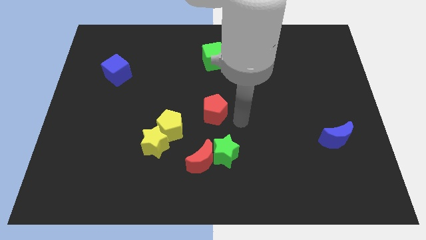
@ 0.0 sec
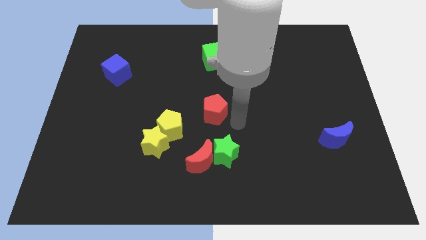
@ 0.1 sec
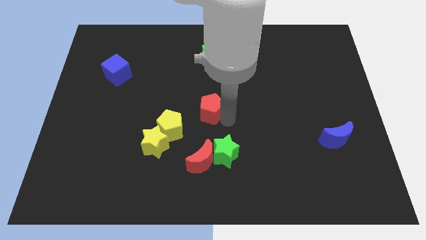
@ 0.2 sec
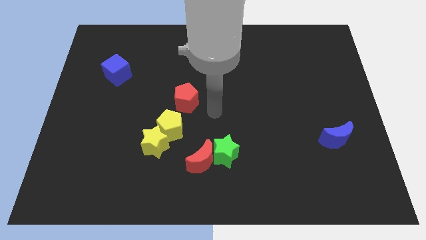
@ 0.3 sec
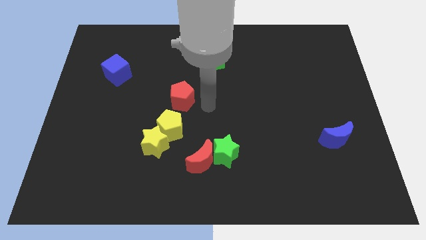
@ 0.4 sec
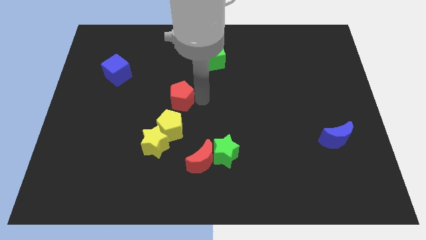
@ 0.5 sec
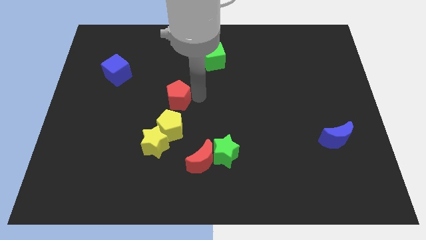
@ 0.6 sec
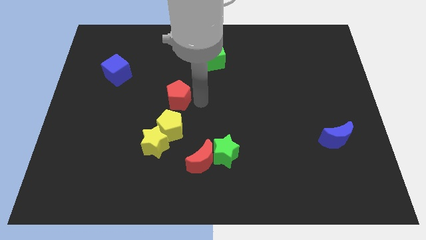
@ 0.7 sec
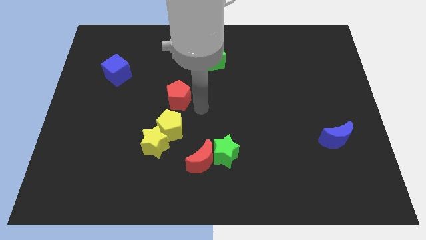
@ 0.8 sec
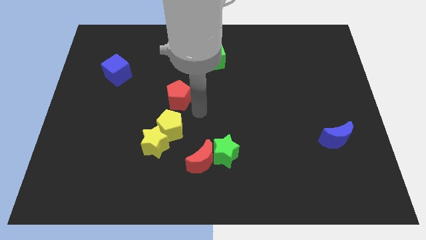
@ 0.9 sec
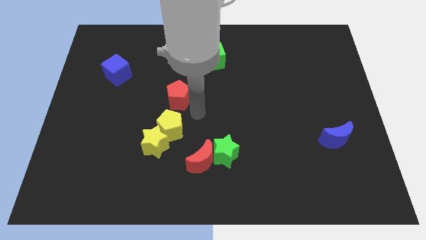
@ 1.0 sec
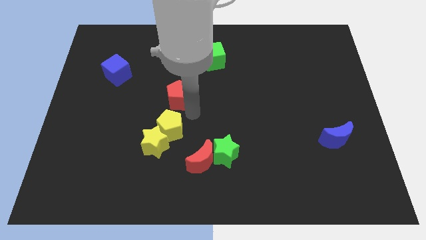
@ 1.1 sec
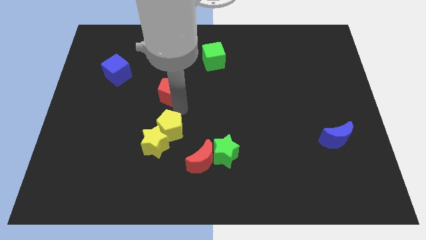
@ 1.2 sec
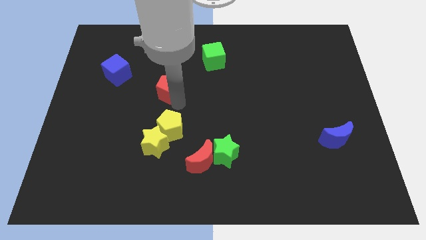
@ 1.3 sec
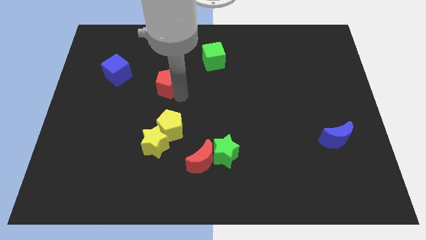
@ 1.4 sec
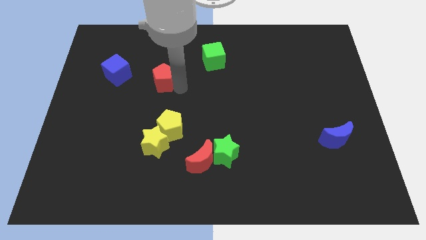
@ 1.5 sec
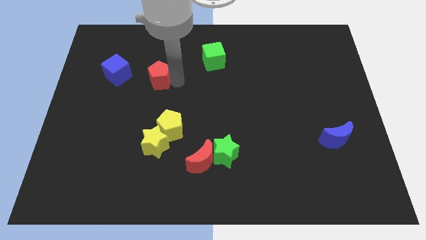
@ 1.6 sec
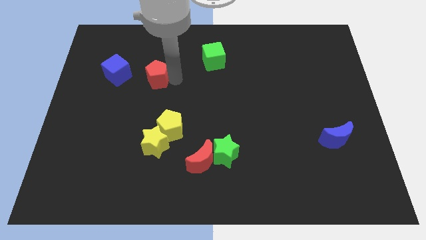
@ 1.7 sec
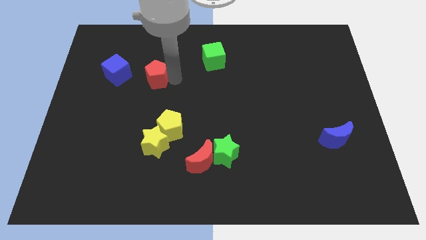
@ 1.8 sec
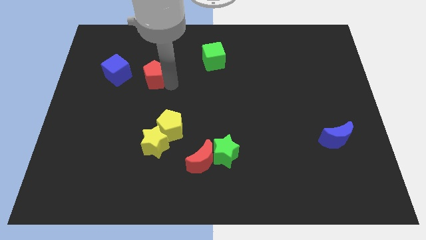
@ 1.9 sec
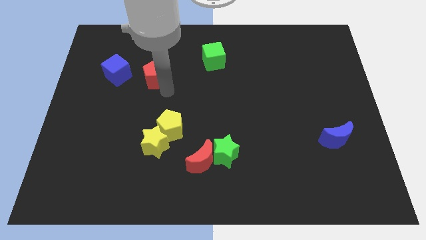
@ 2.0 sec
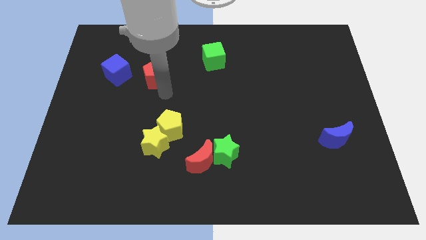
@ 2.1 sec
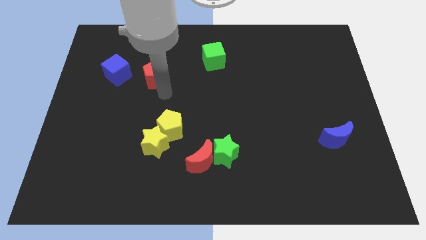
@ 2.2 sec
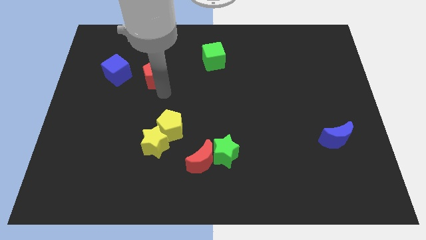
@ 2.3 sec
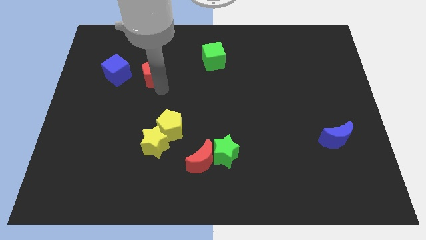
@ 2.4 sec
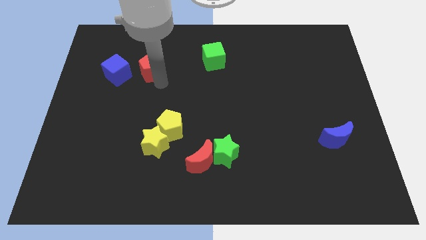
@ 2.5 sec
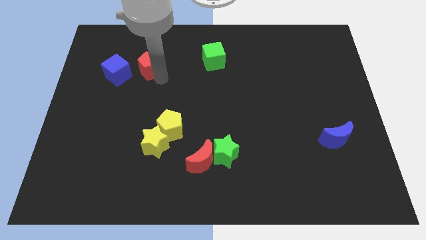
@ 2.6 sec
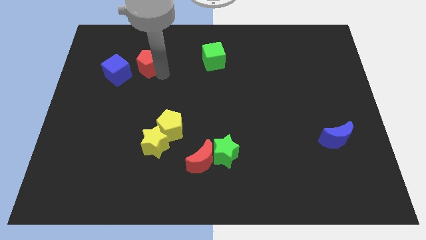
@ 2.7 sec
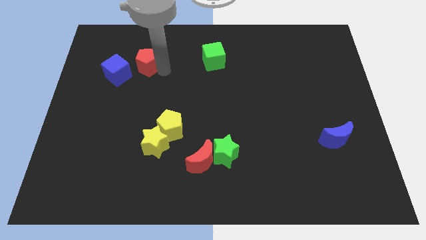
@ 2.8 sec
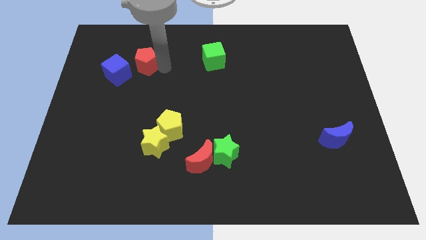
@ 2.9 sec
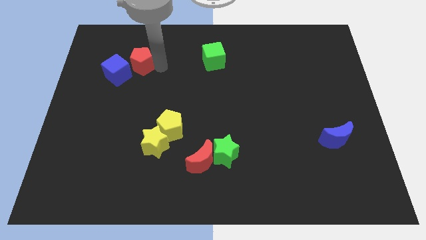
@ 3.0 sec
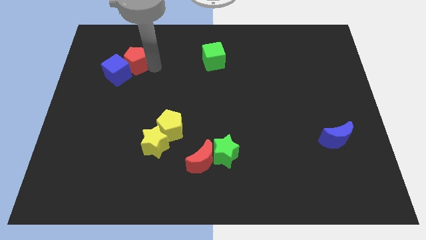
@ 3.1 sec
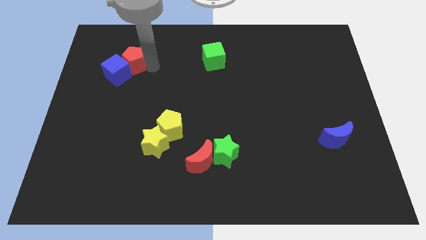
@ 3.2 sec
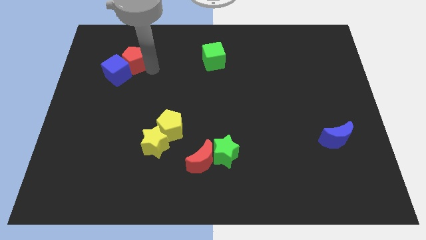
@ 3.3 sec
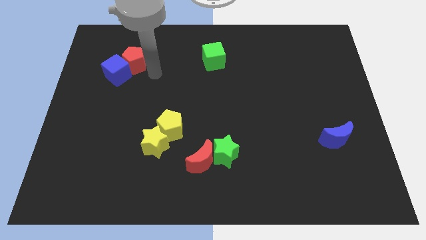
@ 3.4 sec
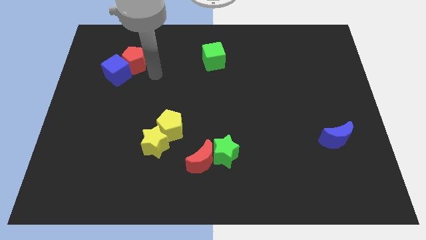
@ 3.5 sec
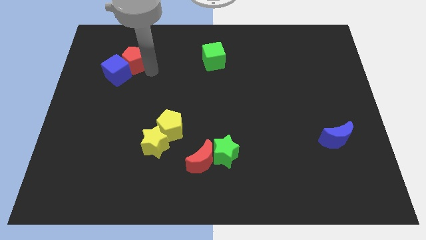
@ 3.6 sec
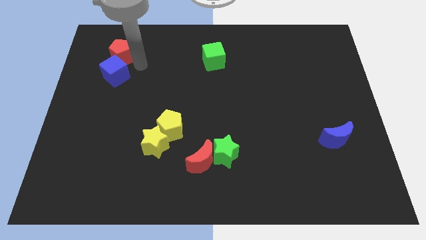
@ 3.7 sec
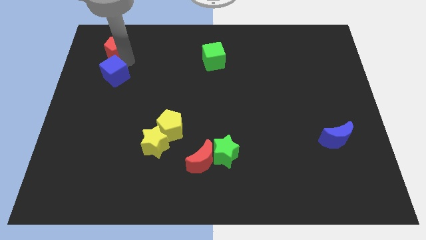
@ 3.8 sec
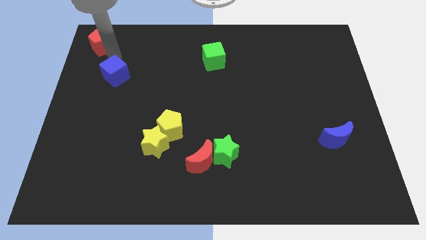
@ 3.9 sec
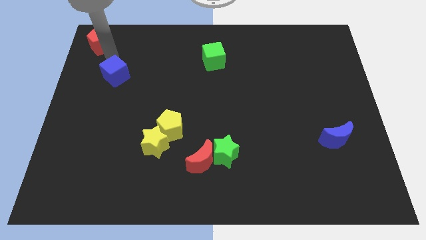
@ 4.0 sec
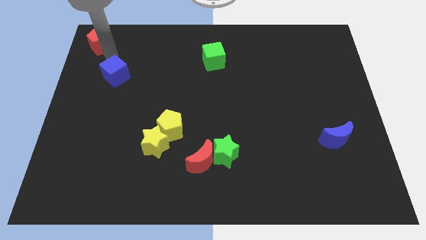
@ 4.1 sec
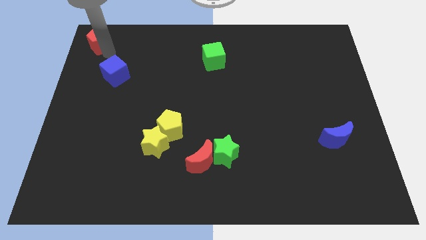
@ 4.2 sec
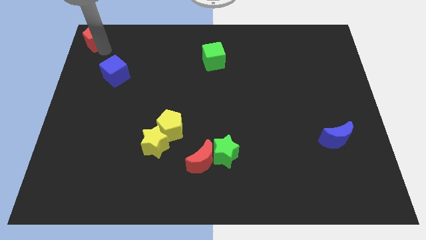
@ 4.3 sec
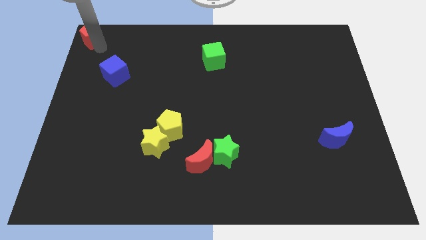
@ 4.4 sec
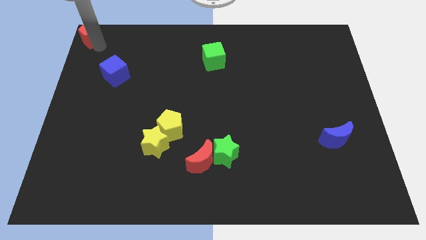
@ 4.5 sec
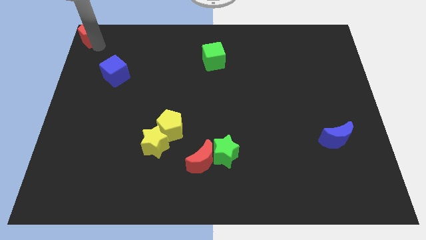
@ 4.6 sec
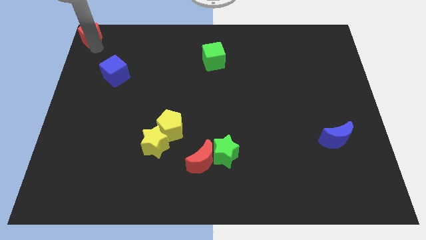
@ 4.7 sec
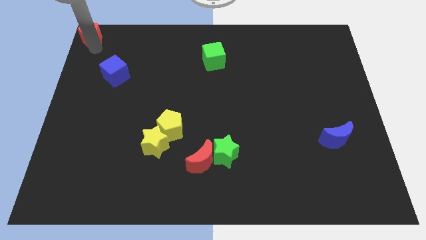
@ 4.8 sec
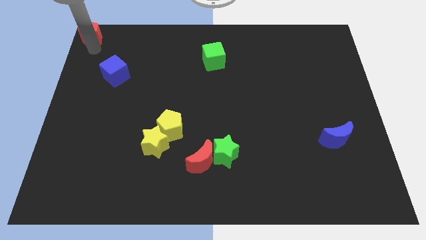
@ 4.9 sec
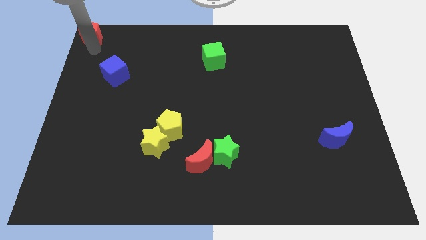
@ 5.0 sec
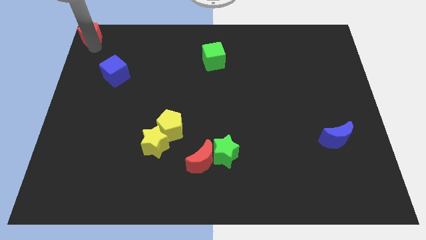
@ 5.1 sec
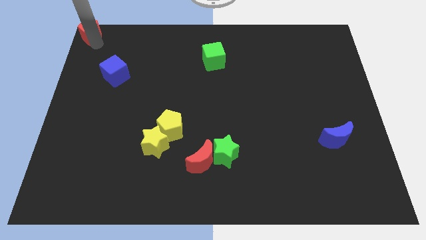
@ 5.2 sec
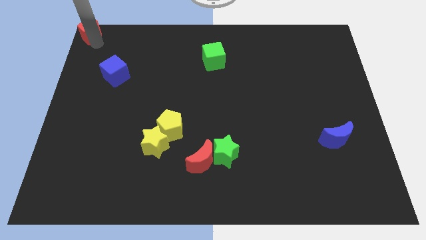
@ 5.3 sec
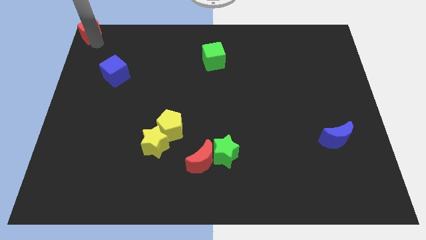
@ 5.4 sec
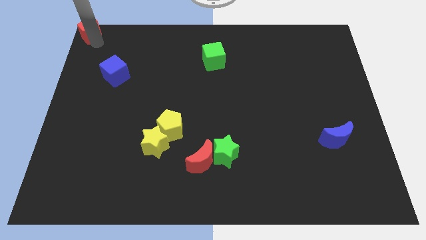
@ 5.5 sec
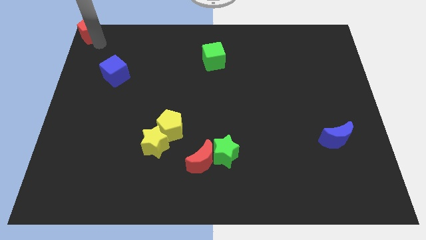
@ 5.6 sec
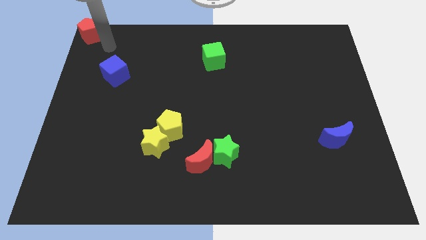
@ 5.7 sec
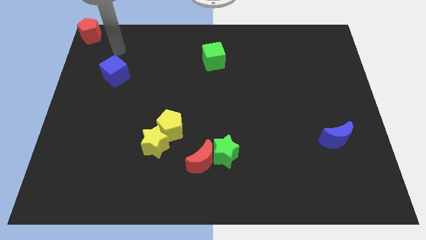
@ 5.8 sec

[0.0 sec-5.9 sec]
place the red pentagon to the left top corner

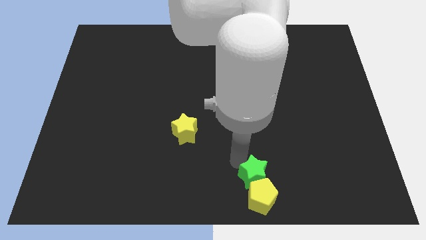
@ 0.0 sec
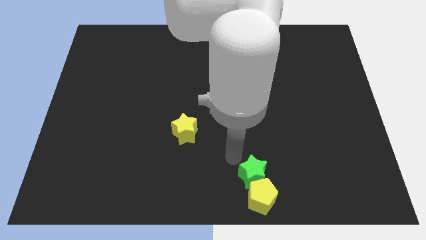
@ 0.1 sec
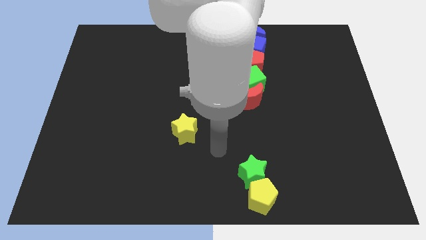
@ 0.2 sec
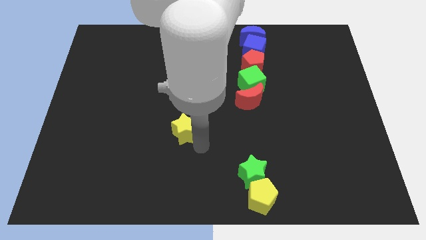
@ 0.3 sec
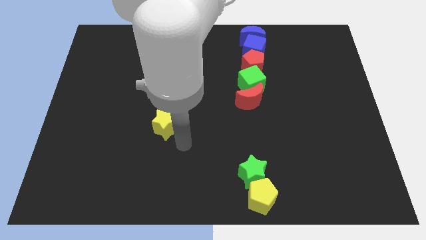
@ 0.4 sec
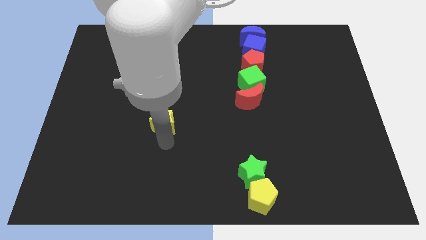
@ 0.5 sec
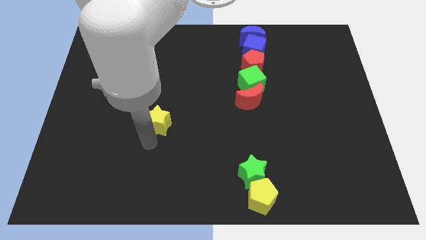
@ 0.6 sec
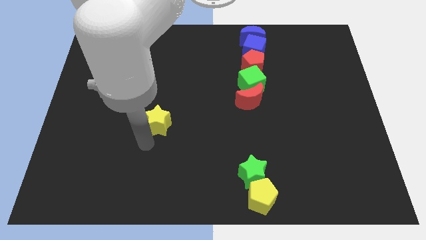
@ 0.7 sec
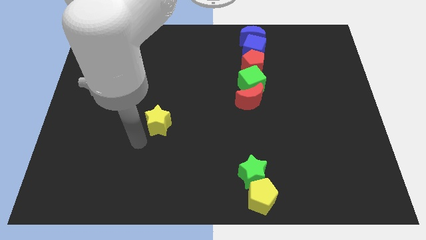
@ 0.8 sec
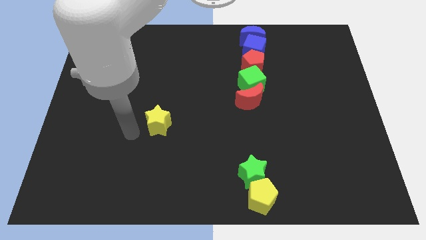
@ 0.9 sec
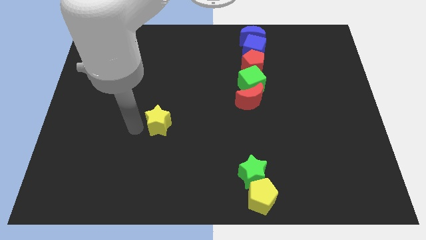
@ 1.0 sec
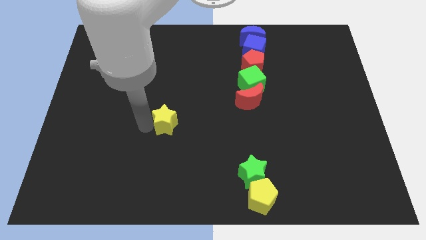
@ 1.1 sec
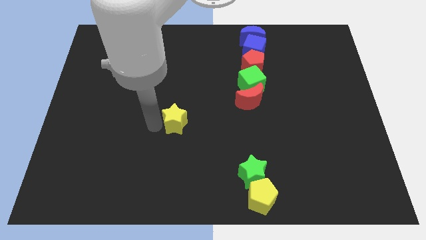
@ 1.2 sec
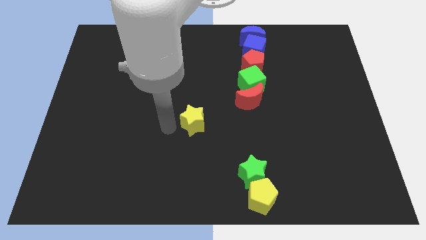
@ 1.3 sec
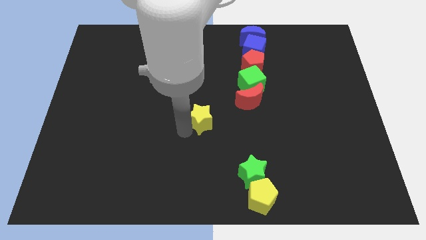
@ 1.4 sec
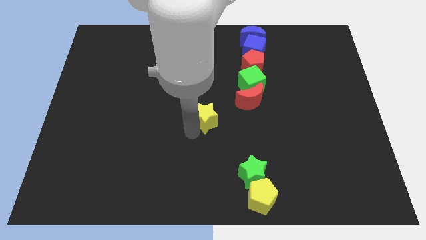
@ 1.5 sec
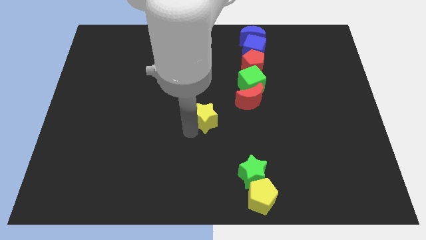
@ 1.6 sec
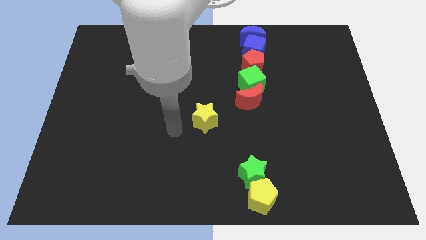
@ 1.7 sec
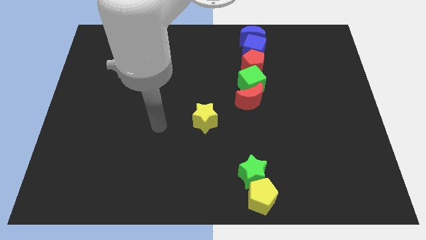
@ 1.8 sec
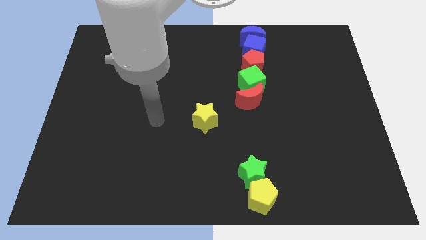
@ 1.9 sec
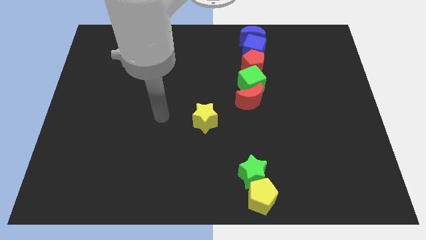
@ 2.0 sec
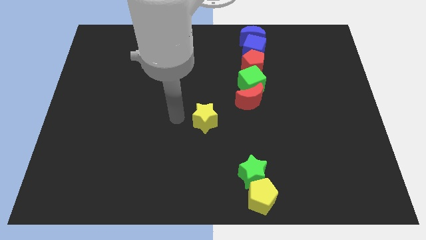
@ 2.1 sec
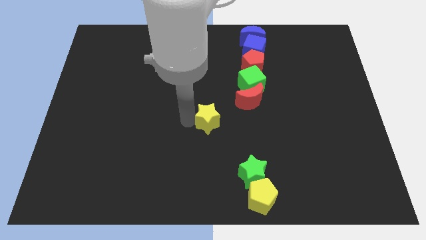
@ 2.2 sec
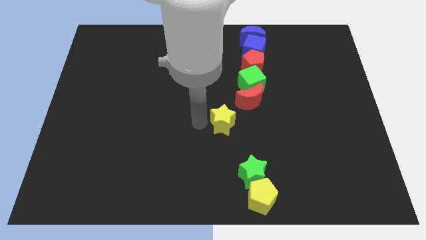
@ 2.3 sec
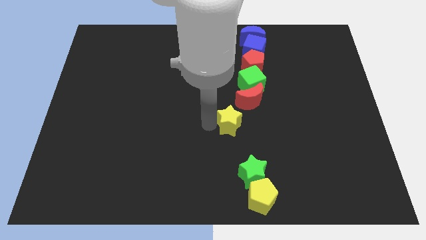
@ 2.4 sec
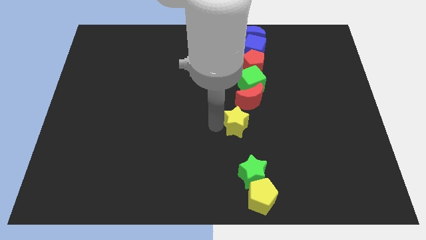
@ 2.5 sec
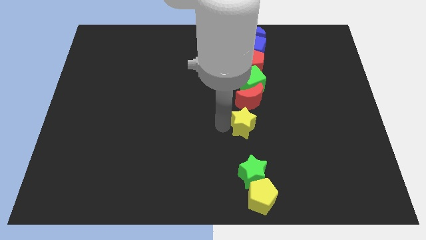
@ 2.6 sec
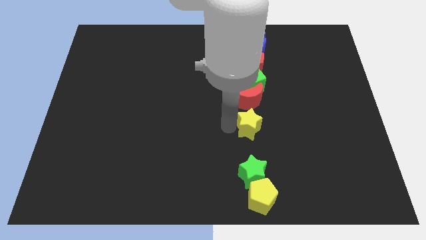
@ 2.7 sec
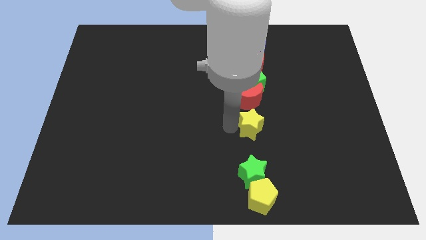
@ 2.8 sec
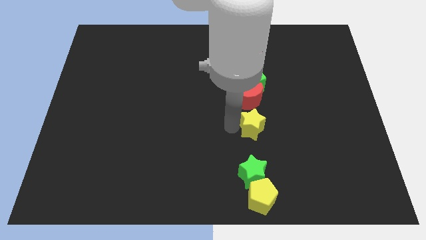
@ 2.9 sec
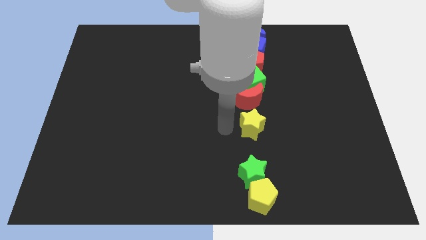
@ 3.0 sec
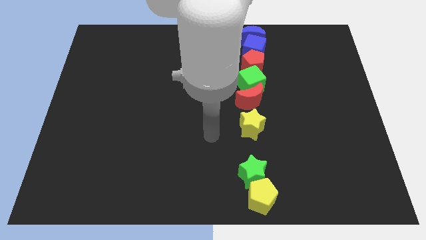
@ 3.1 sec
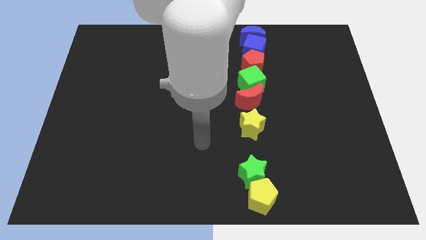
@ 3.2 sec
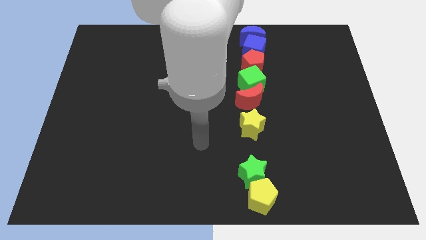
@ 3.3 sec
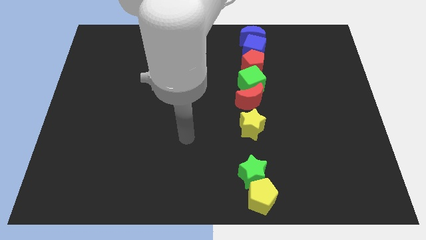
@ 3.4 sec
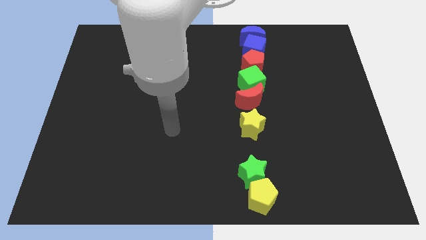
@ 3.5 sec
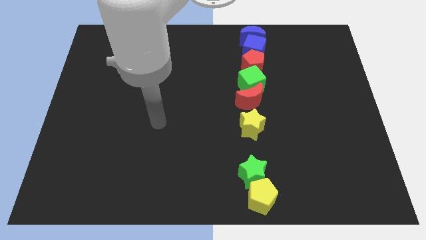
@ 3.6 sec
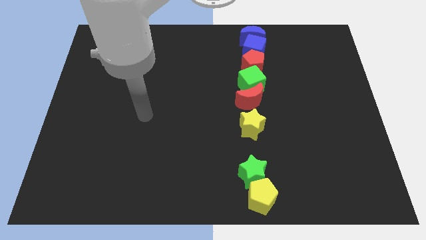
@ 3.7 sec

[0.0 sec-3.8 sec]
place the yellow star near bottom of the red crescent
